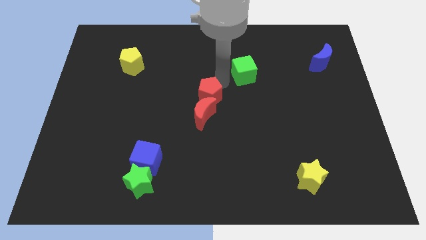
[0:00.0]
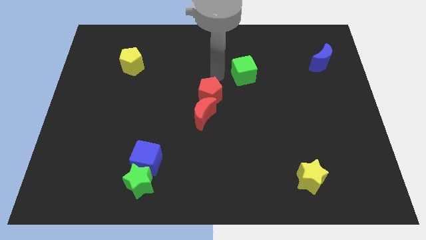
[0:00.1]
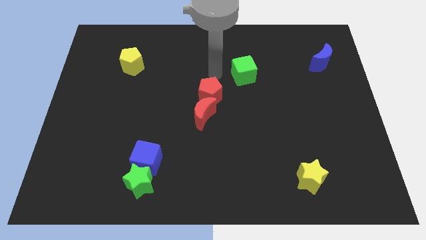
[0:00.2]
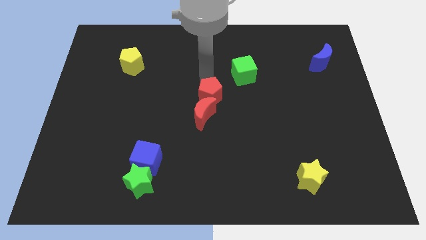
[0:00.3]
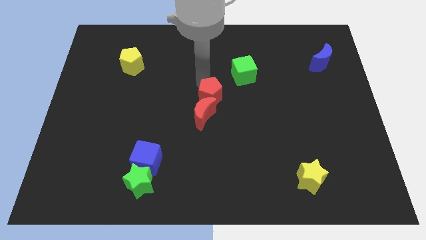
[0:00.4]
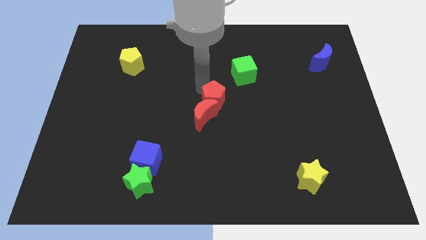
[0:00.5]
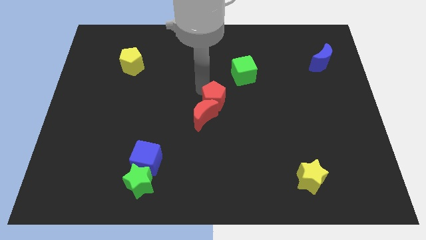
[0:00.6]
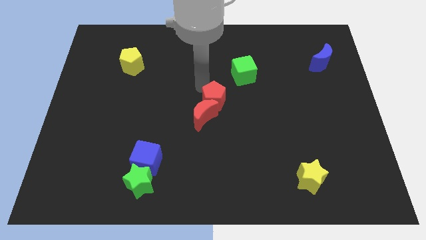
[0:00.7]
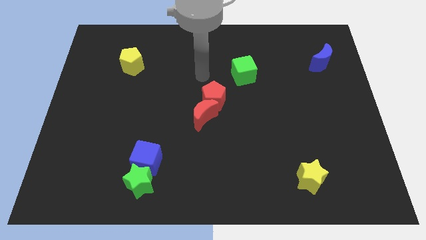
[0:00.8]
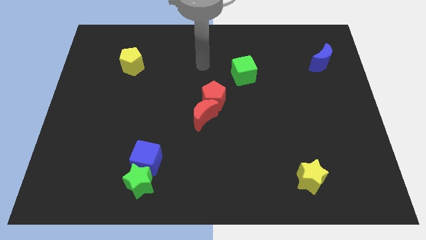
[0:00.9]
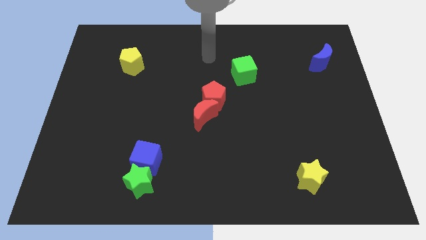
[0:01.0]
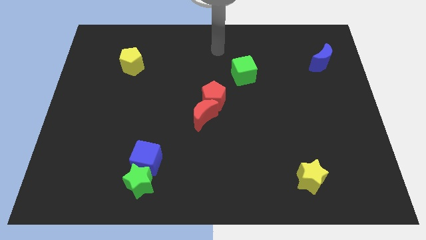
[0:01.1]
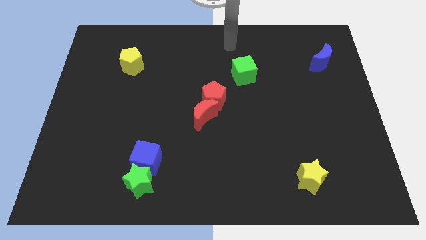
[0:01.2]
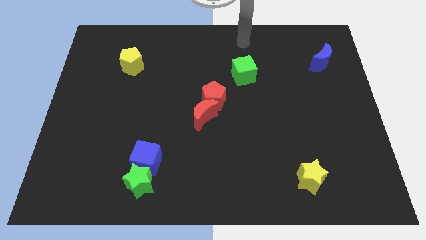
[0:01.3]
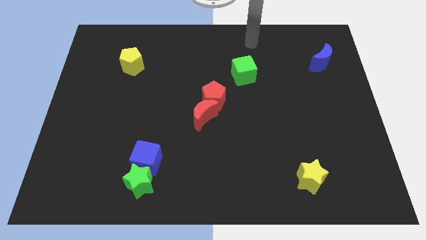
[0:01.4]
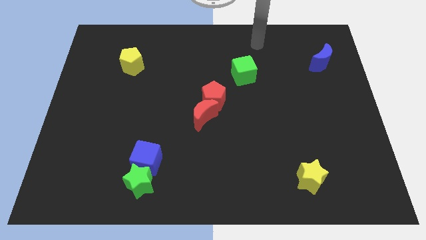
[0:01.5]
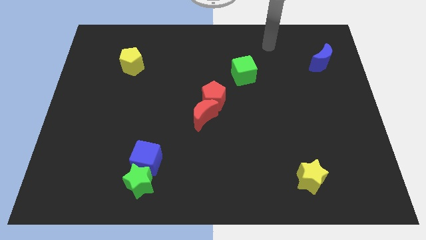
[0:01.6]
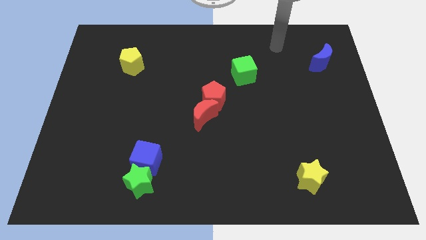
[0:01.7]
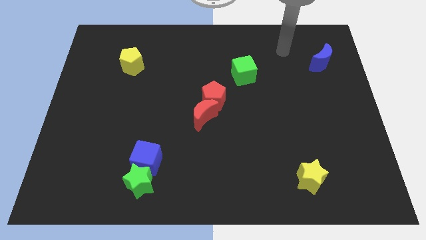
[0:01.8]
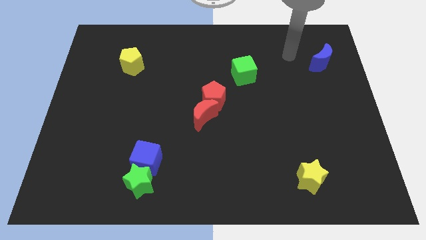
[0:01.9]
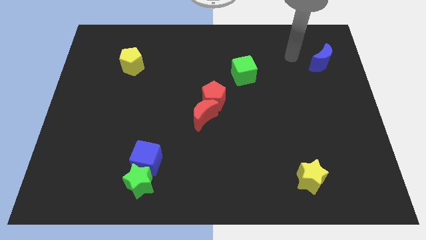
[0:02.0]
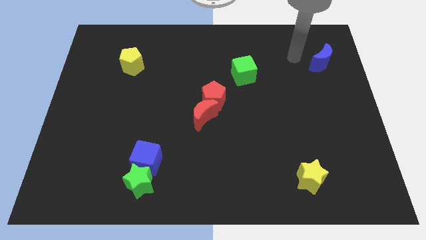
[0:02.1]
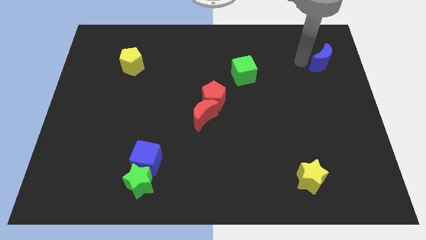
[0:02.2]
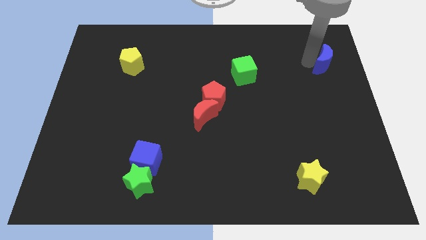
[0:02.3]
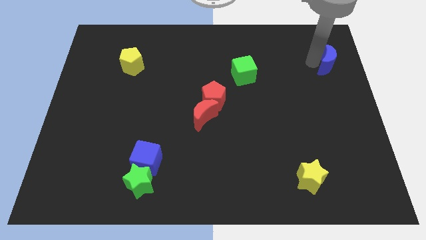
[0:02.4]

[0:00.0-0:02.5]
place the arm left to the blue moon

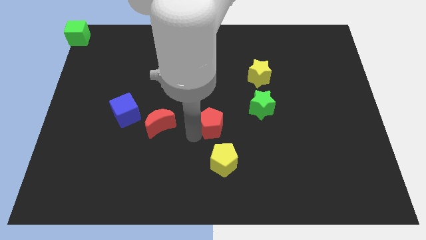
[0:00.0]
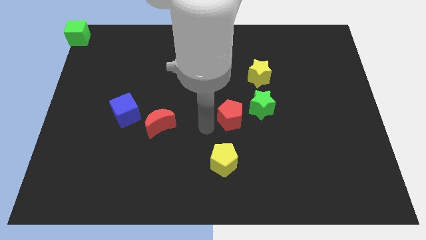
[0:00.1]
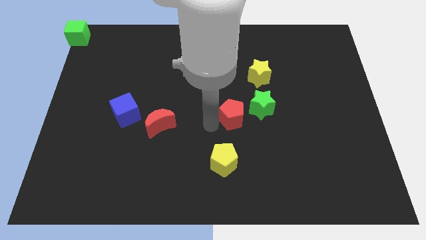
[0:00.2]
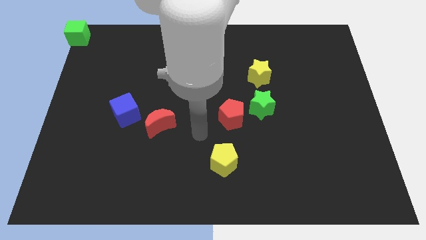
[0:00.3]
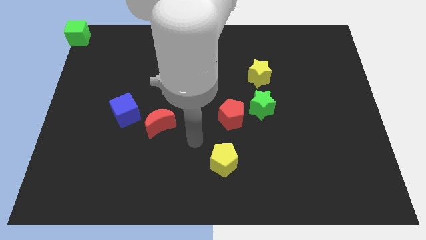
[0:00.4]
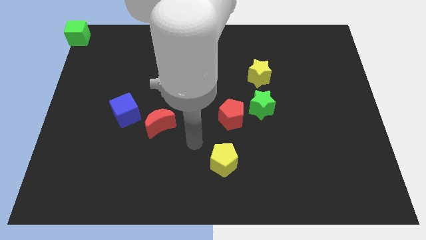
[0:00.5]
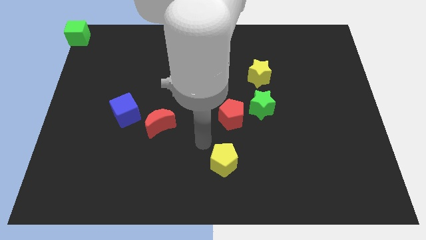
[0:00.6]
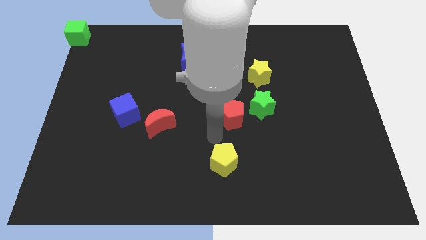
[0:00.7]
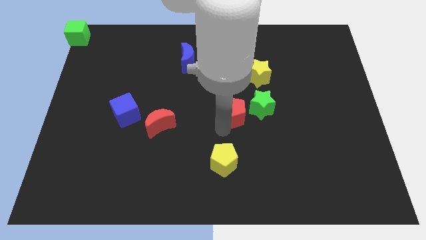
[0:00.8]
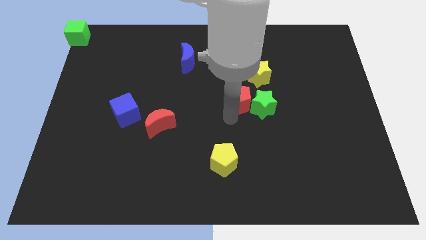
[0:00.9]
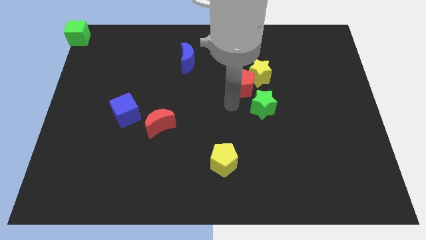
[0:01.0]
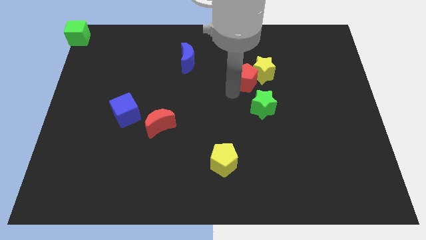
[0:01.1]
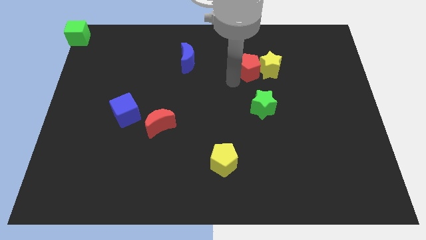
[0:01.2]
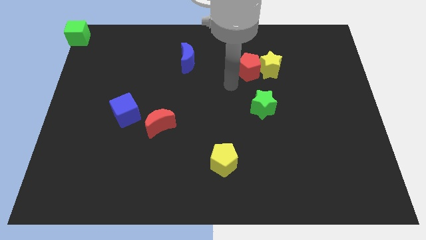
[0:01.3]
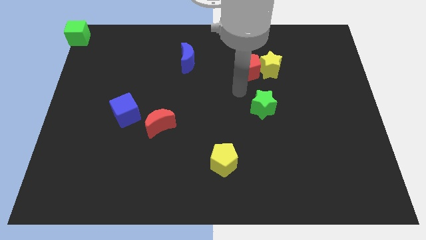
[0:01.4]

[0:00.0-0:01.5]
push the red pentagon left to the yellow star

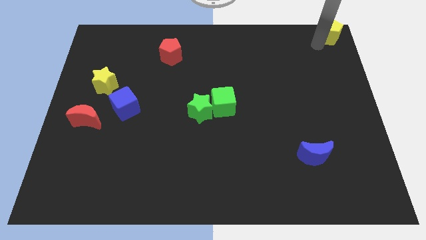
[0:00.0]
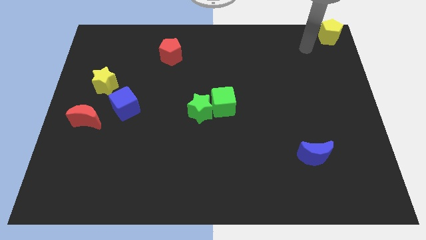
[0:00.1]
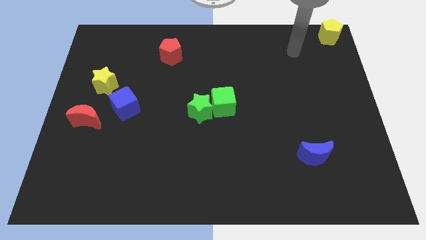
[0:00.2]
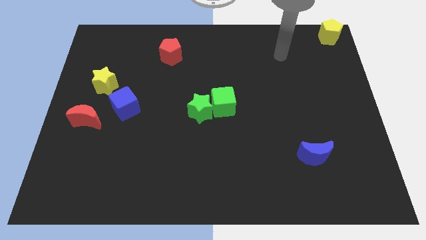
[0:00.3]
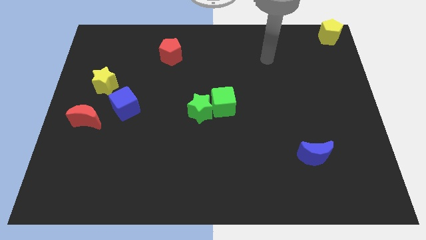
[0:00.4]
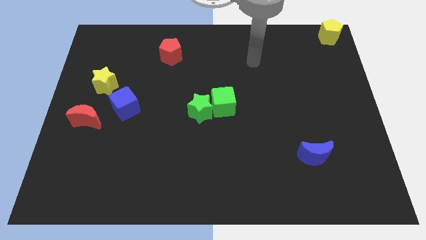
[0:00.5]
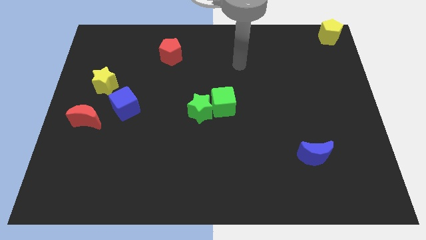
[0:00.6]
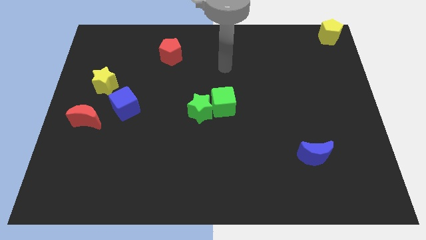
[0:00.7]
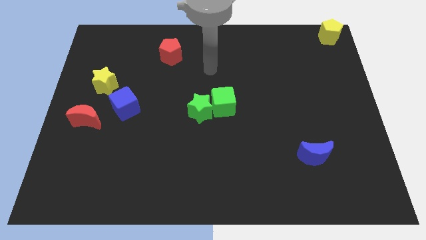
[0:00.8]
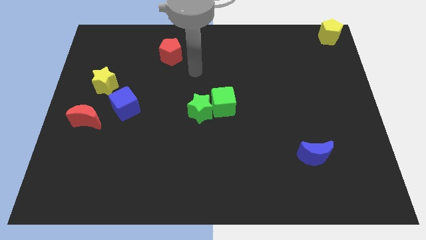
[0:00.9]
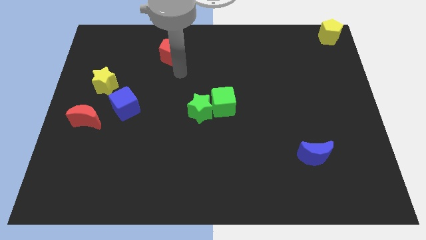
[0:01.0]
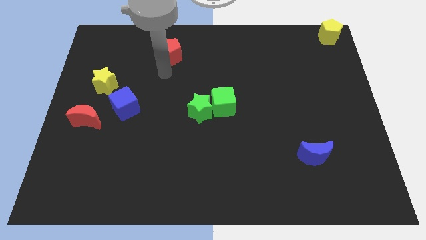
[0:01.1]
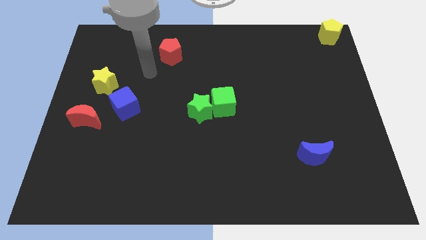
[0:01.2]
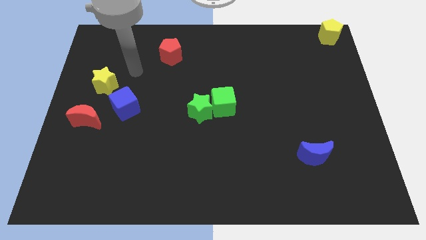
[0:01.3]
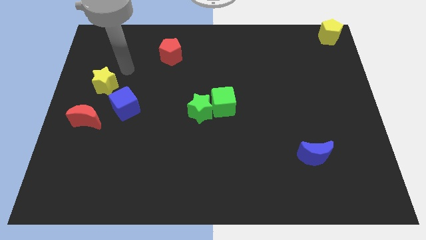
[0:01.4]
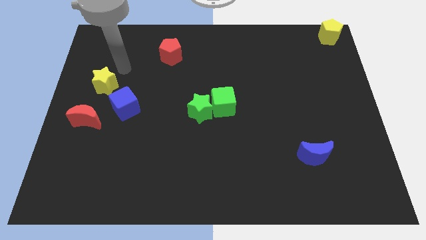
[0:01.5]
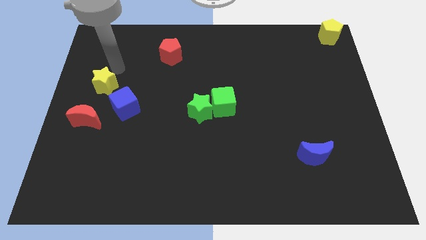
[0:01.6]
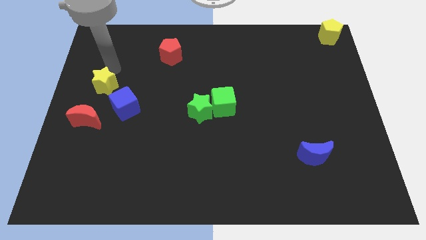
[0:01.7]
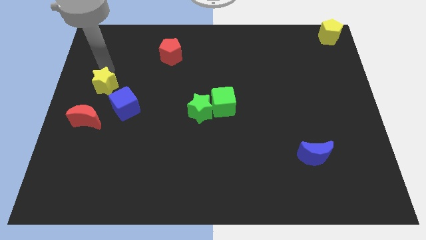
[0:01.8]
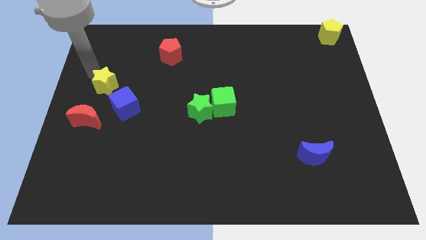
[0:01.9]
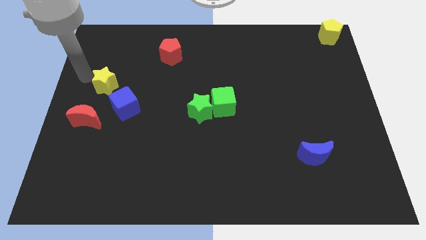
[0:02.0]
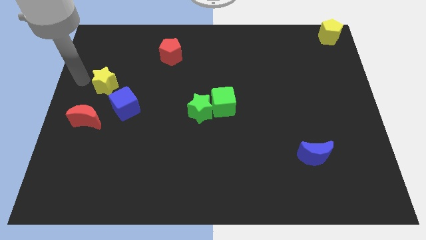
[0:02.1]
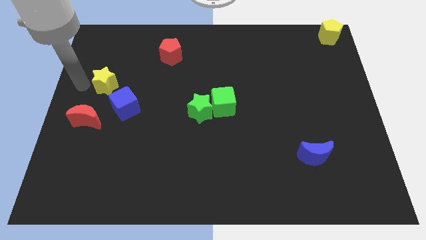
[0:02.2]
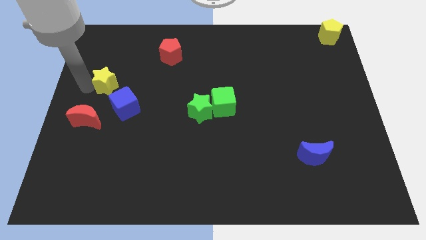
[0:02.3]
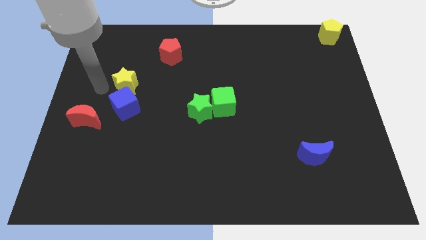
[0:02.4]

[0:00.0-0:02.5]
push the yellow star slightly to the right

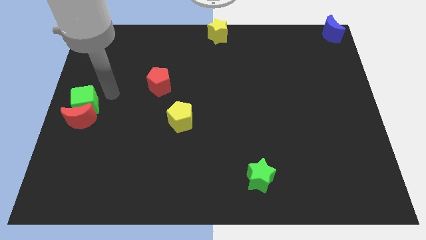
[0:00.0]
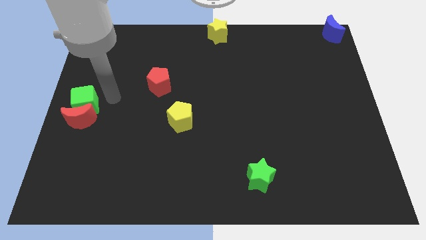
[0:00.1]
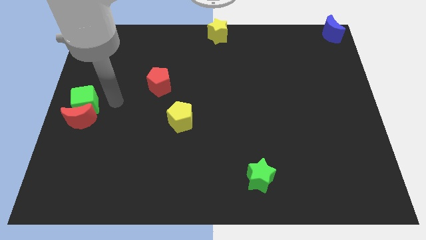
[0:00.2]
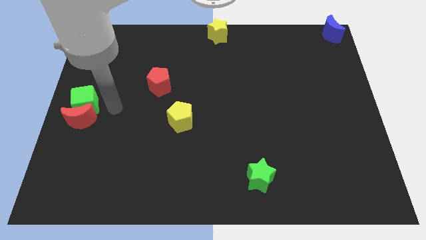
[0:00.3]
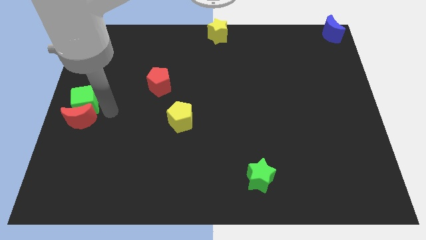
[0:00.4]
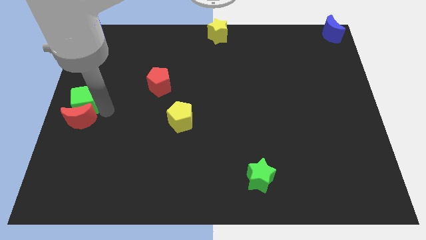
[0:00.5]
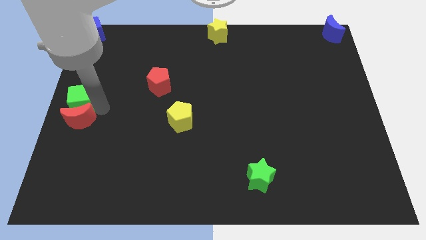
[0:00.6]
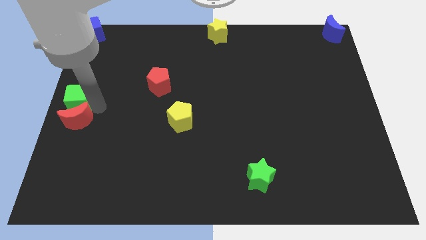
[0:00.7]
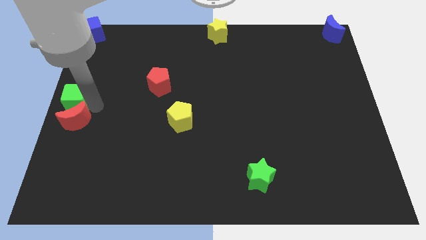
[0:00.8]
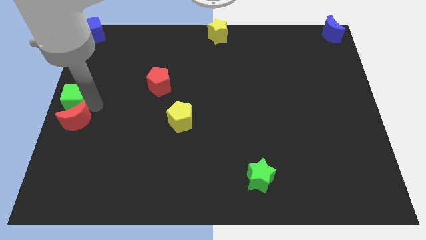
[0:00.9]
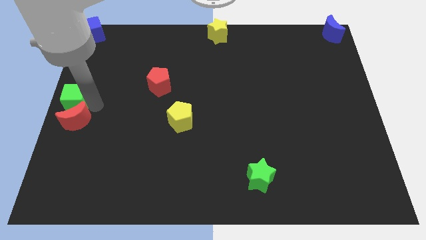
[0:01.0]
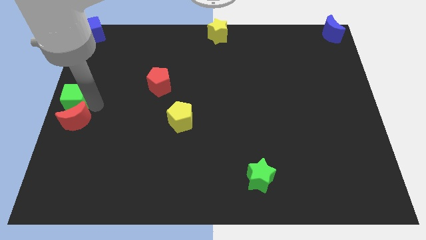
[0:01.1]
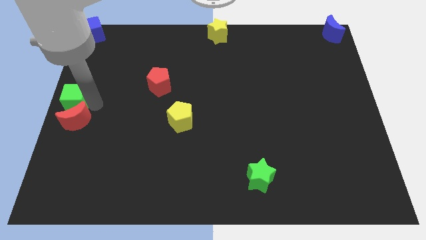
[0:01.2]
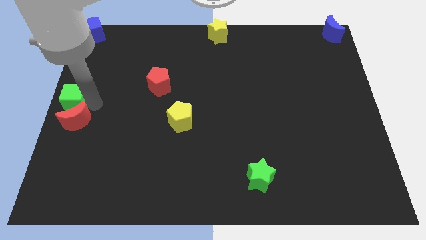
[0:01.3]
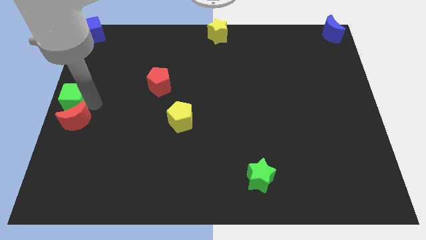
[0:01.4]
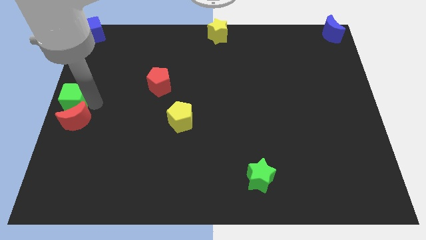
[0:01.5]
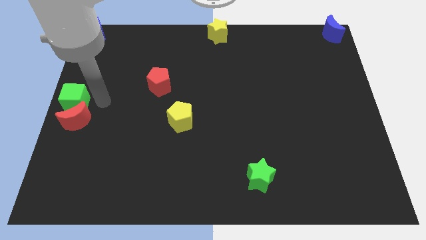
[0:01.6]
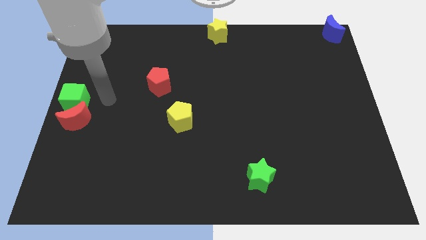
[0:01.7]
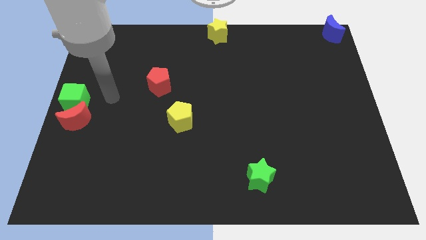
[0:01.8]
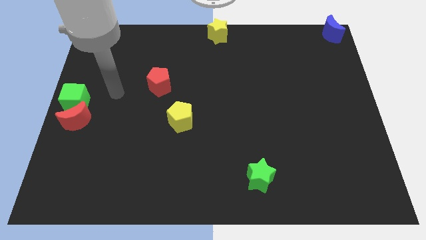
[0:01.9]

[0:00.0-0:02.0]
slightly move the green cube to the left center on the board

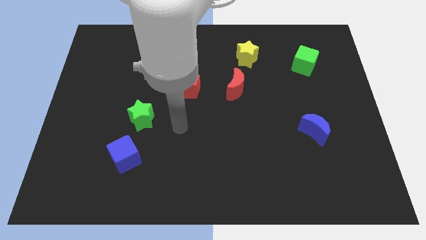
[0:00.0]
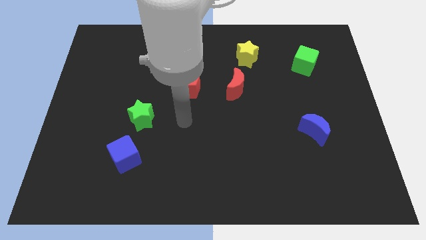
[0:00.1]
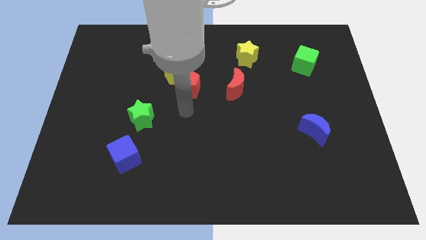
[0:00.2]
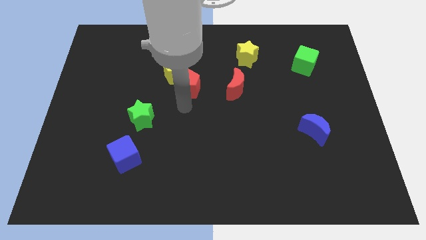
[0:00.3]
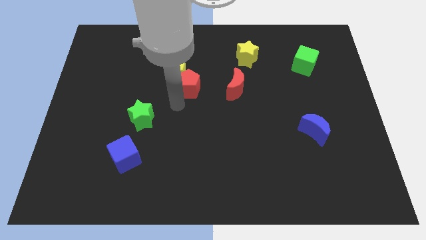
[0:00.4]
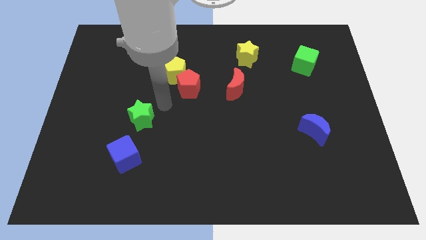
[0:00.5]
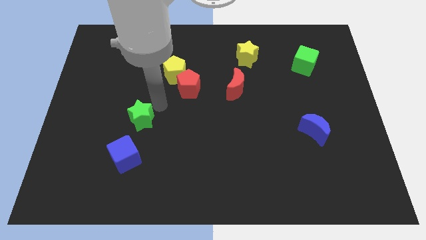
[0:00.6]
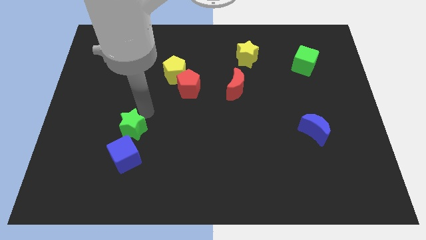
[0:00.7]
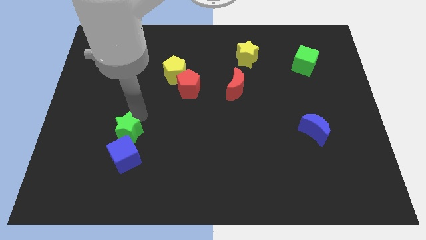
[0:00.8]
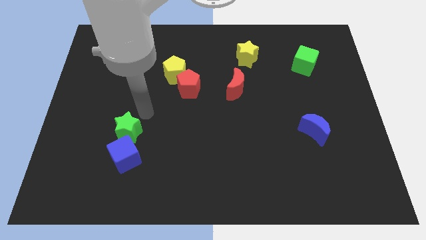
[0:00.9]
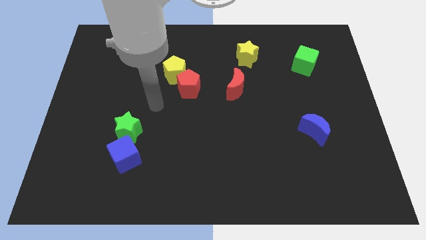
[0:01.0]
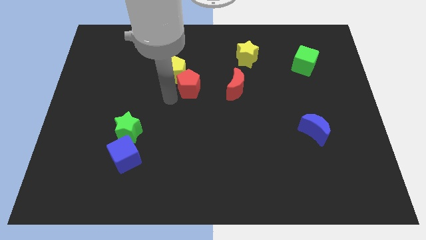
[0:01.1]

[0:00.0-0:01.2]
push the green star into the blue cube
